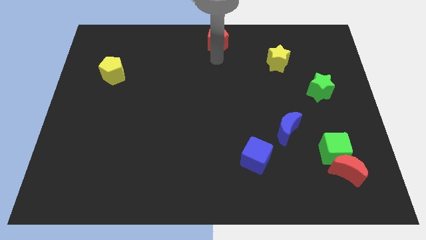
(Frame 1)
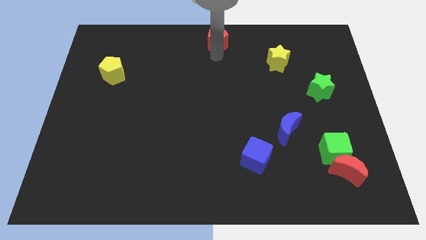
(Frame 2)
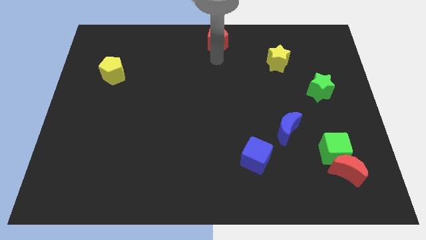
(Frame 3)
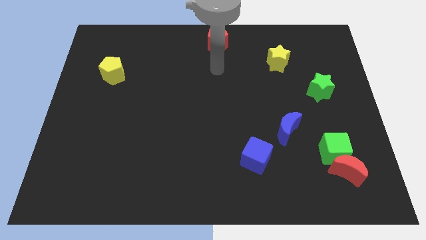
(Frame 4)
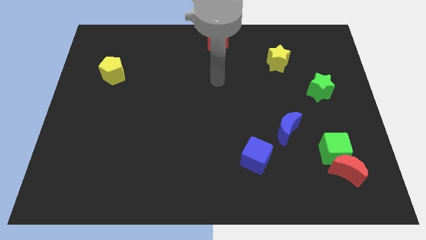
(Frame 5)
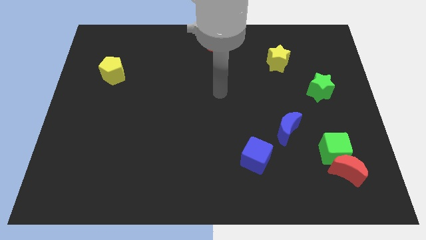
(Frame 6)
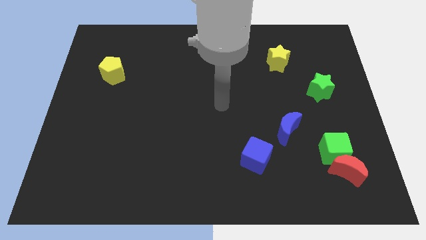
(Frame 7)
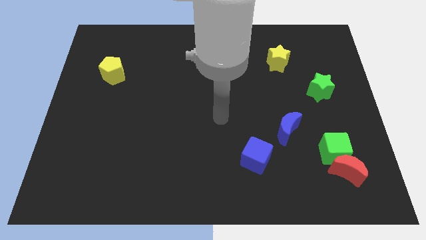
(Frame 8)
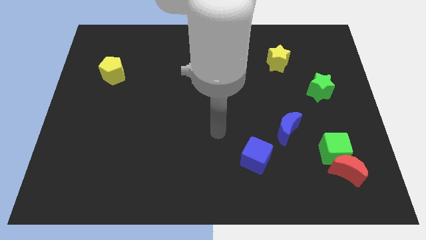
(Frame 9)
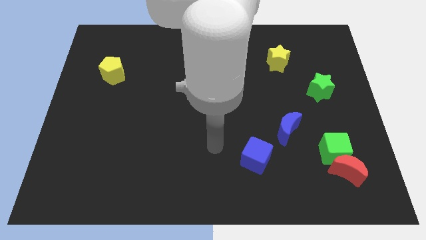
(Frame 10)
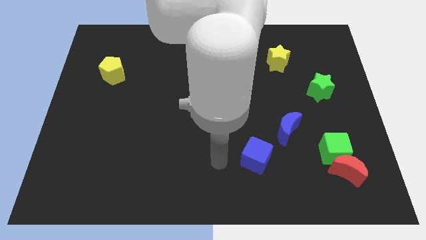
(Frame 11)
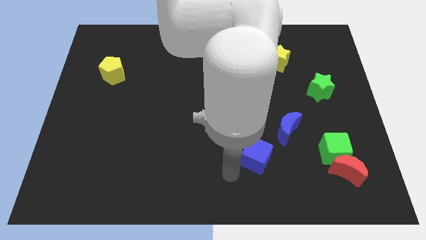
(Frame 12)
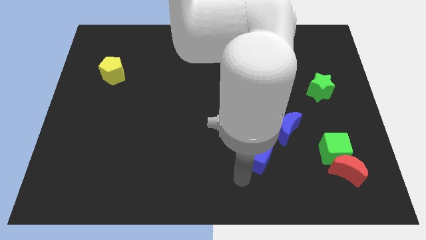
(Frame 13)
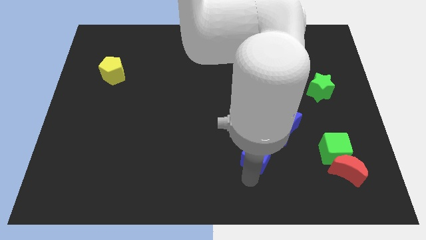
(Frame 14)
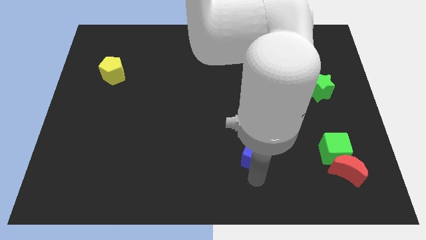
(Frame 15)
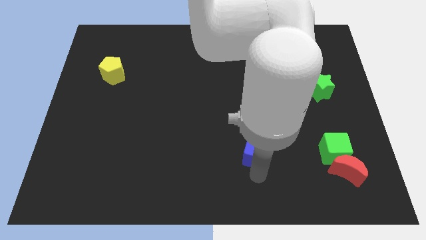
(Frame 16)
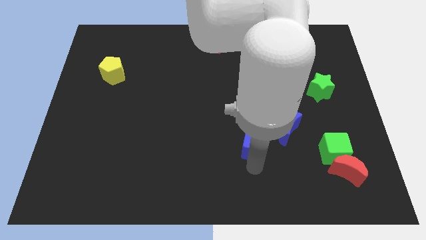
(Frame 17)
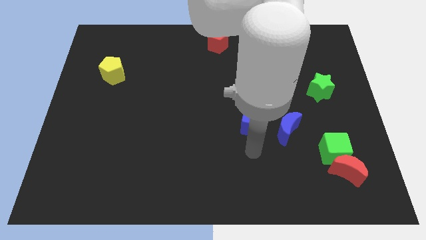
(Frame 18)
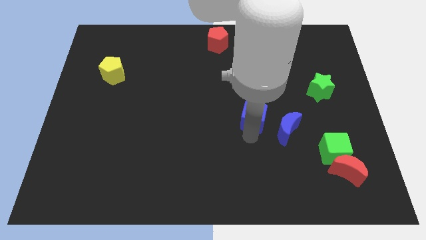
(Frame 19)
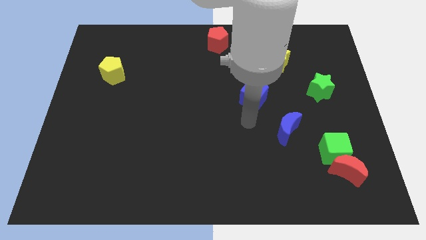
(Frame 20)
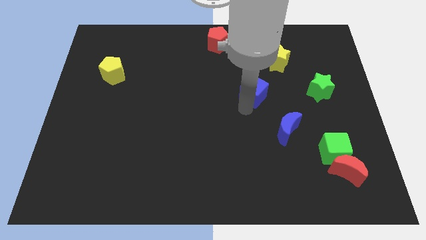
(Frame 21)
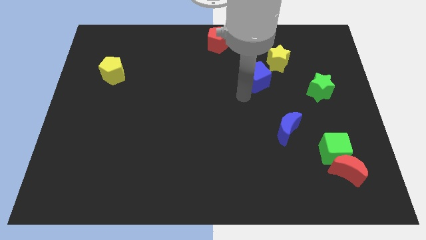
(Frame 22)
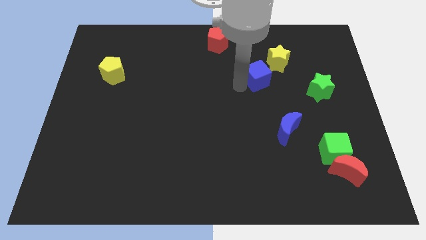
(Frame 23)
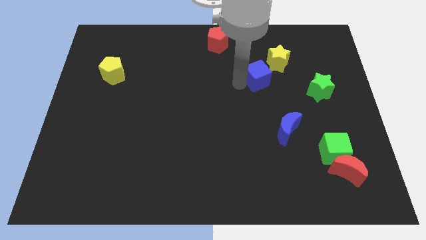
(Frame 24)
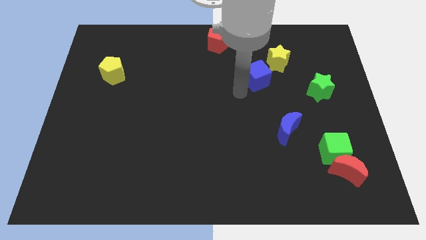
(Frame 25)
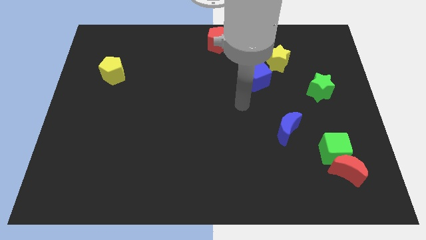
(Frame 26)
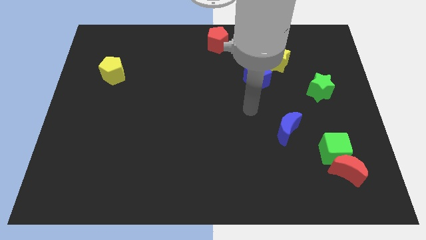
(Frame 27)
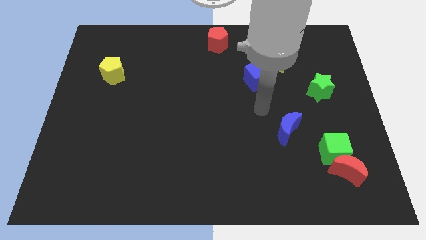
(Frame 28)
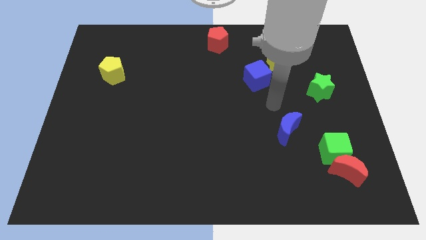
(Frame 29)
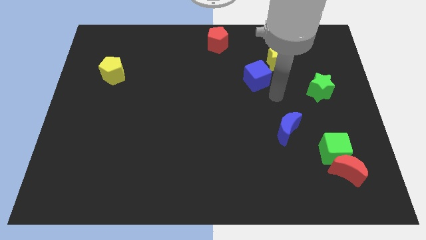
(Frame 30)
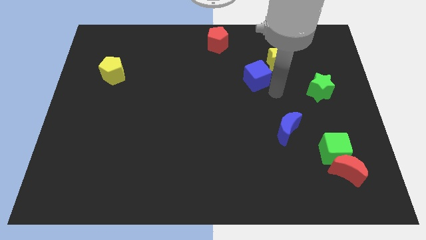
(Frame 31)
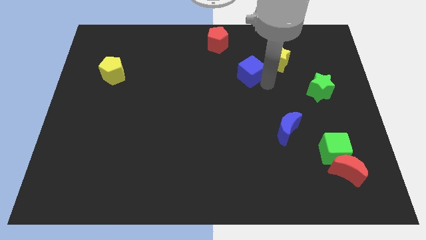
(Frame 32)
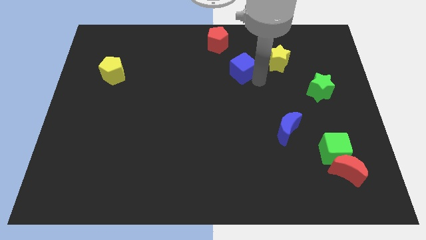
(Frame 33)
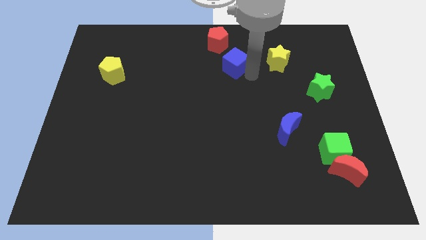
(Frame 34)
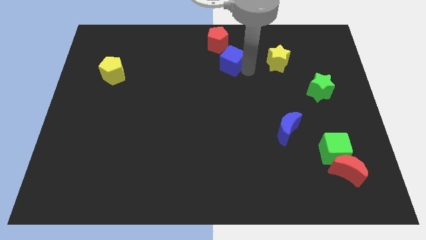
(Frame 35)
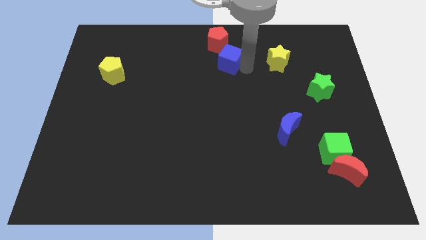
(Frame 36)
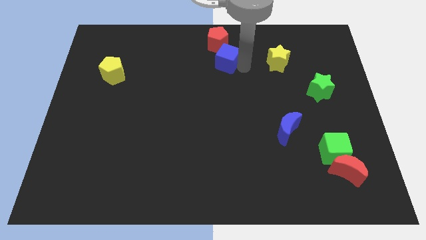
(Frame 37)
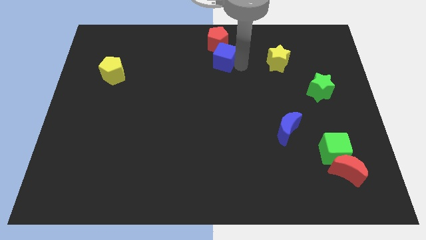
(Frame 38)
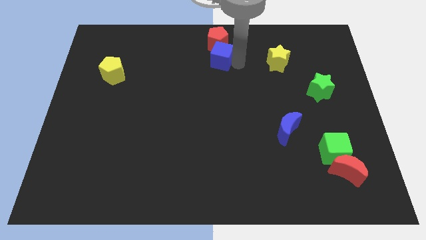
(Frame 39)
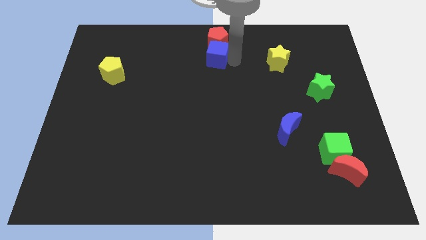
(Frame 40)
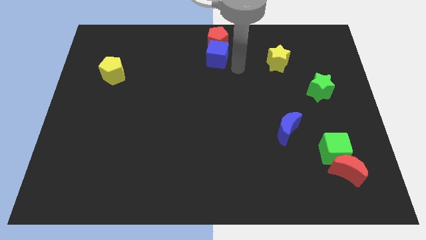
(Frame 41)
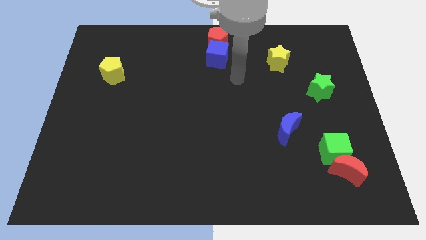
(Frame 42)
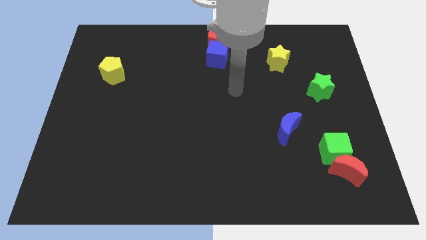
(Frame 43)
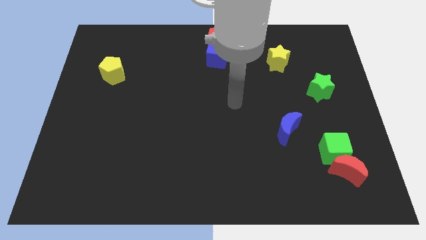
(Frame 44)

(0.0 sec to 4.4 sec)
move the blue cube to the bottom of the red pentagon

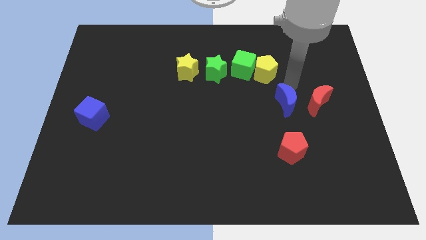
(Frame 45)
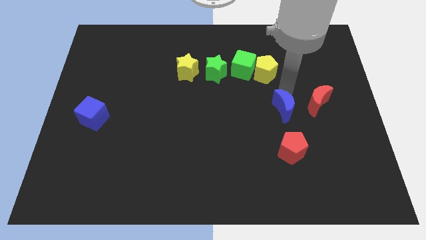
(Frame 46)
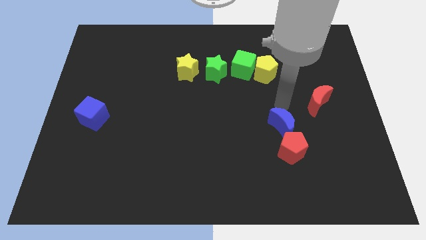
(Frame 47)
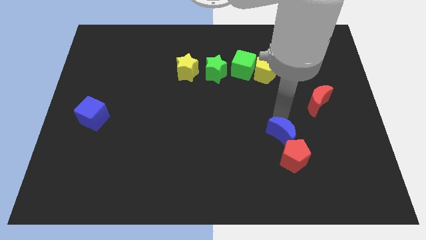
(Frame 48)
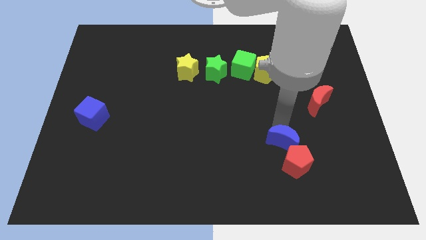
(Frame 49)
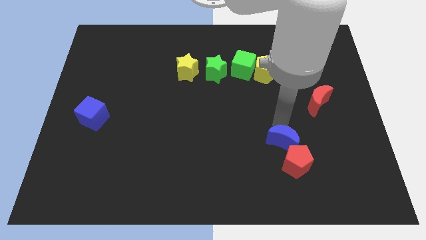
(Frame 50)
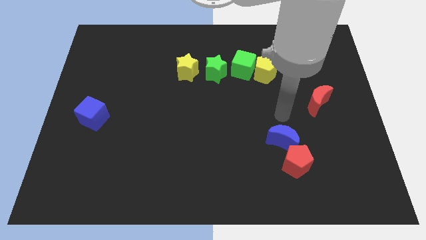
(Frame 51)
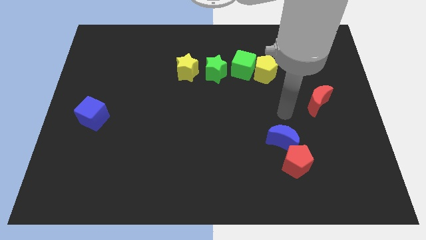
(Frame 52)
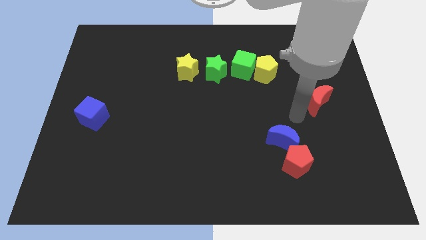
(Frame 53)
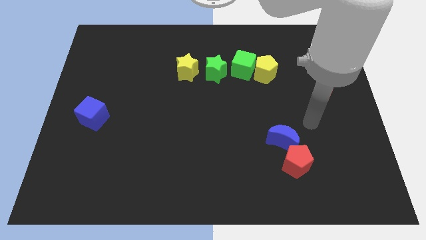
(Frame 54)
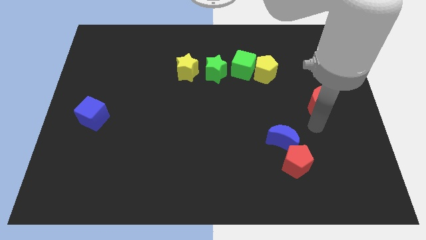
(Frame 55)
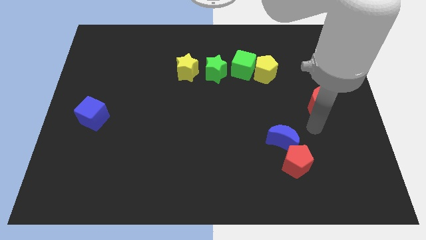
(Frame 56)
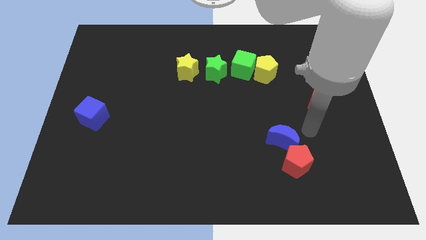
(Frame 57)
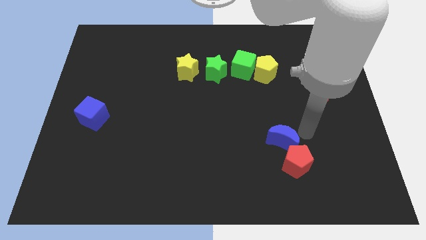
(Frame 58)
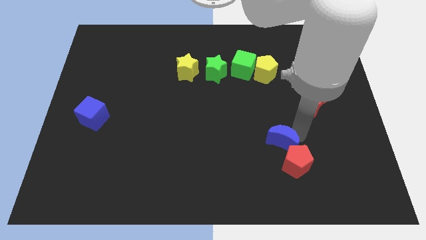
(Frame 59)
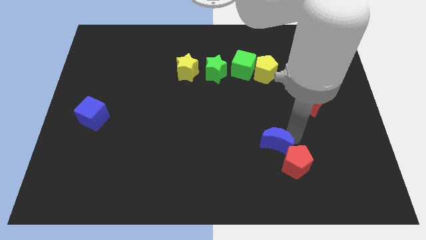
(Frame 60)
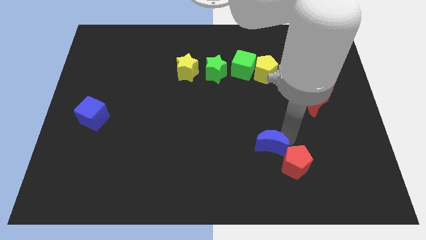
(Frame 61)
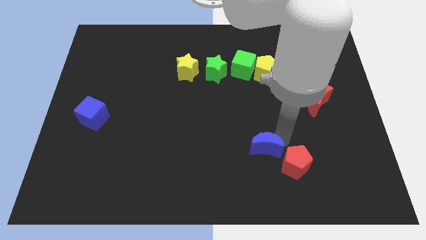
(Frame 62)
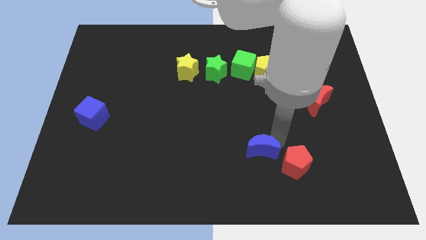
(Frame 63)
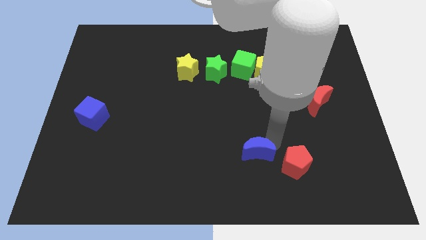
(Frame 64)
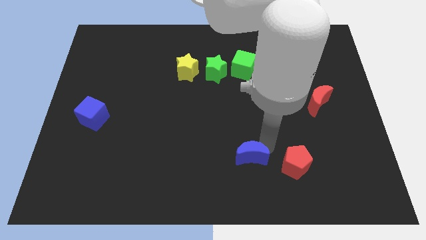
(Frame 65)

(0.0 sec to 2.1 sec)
push the blue crescent left to the red pentagon

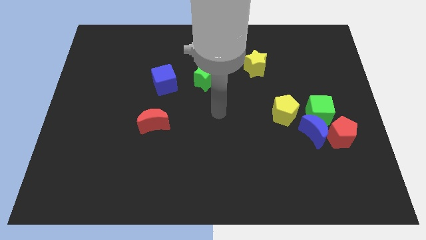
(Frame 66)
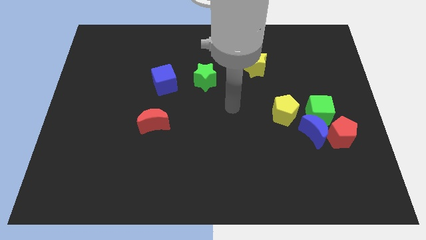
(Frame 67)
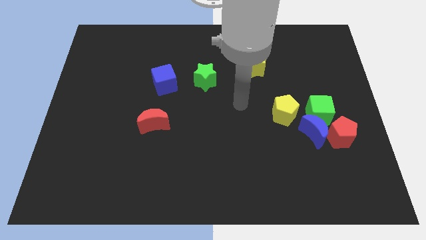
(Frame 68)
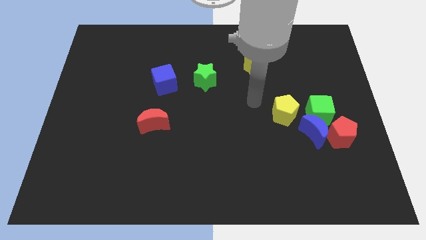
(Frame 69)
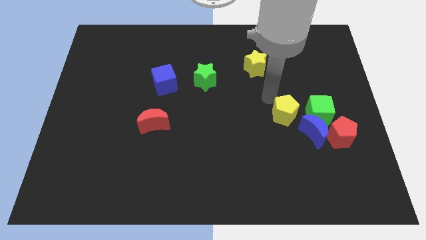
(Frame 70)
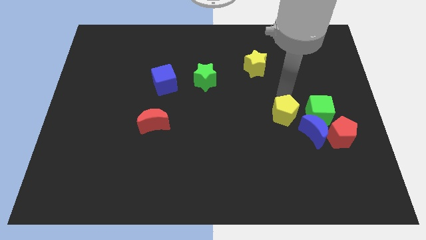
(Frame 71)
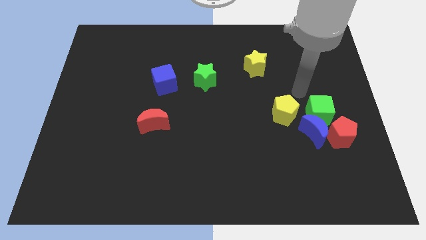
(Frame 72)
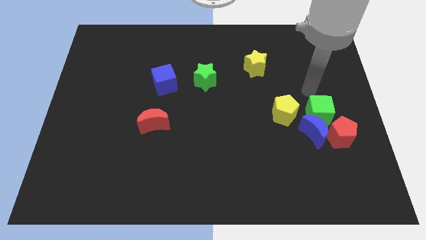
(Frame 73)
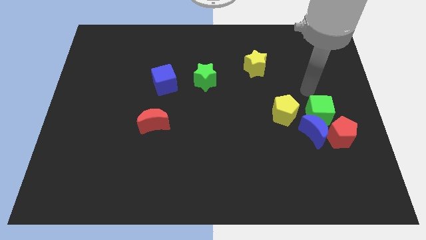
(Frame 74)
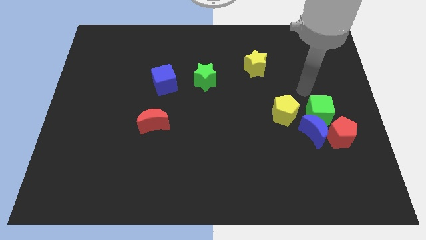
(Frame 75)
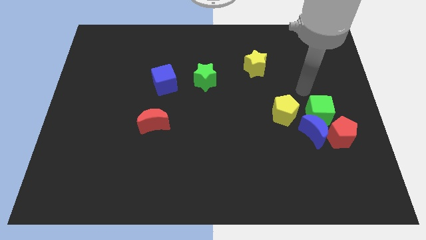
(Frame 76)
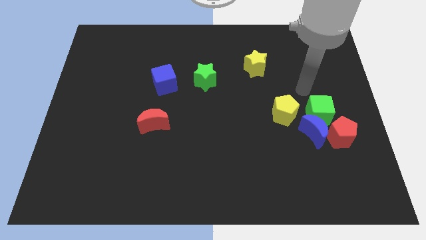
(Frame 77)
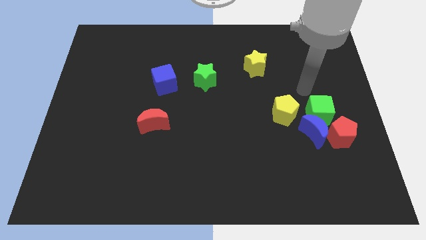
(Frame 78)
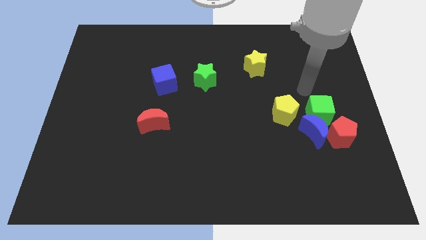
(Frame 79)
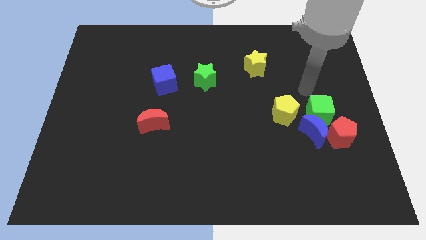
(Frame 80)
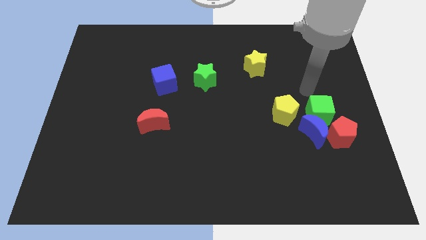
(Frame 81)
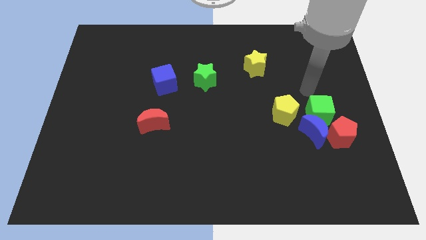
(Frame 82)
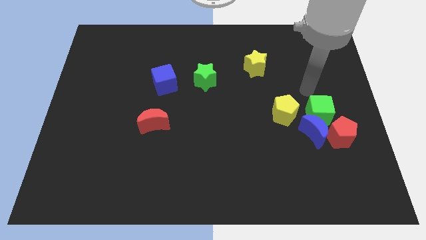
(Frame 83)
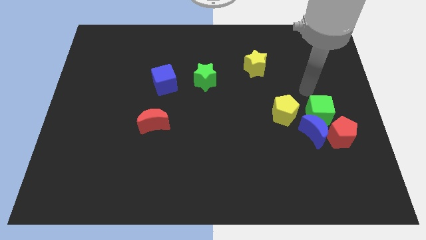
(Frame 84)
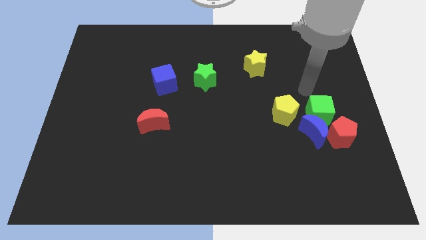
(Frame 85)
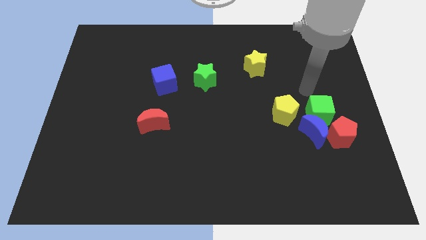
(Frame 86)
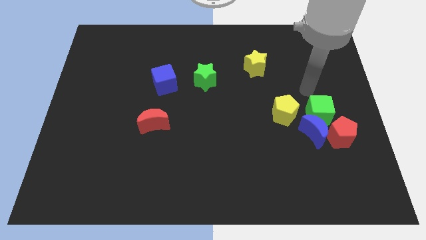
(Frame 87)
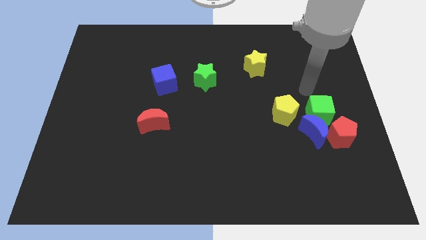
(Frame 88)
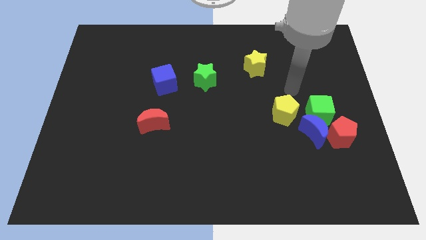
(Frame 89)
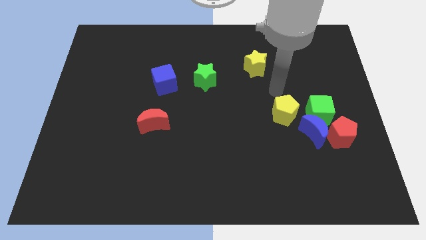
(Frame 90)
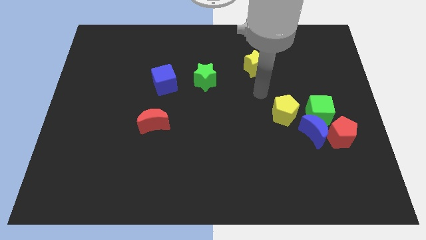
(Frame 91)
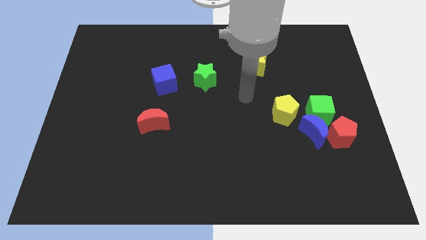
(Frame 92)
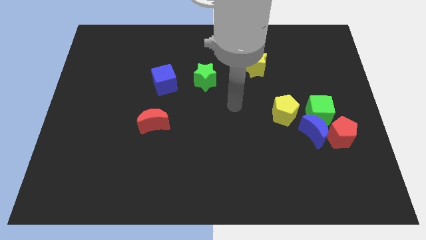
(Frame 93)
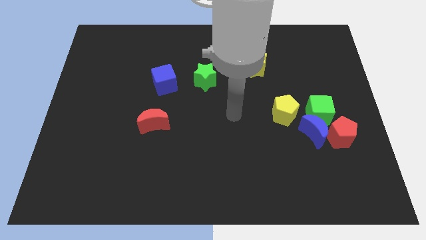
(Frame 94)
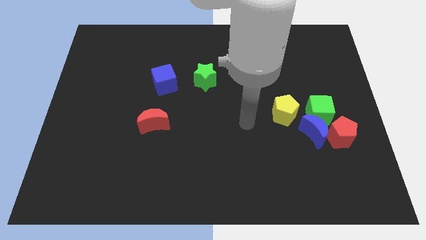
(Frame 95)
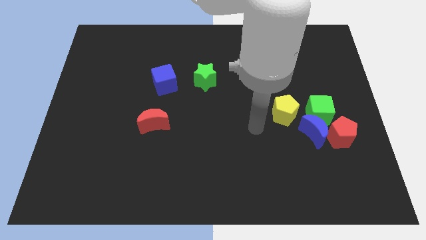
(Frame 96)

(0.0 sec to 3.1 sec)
place your arm at the bottom left of the yellow pentagon
